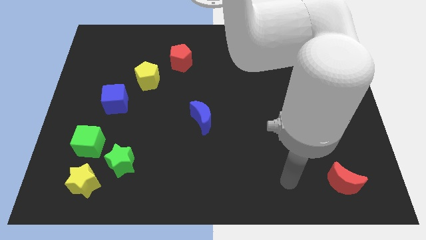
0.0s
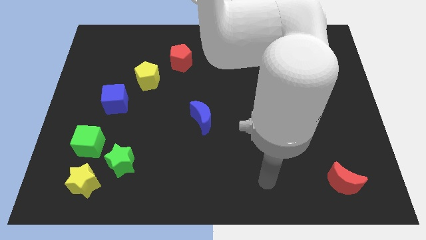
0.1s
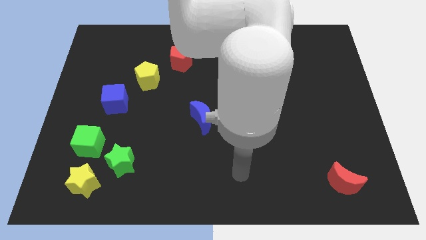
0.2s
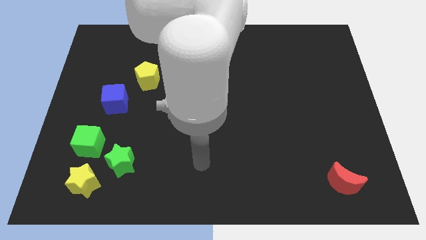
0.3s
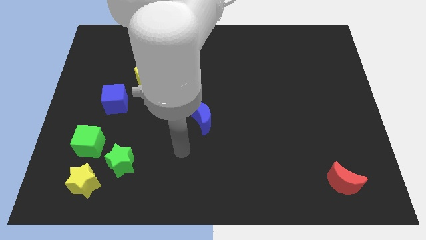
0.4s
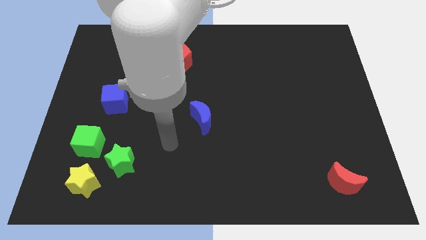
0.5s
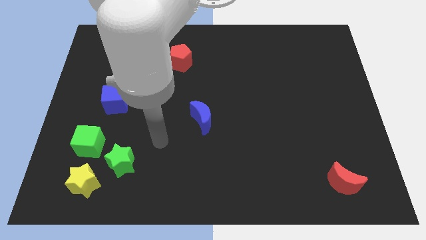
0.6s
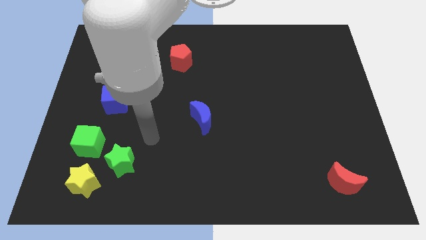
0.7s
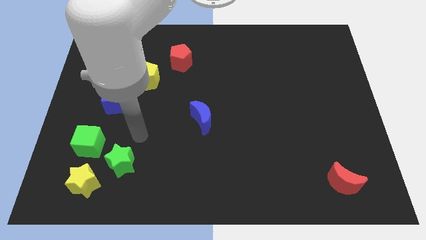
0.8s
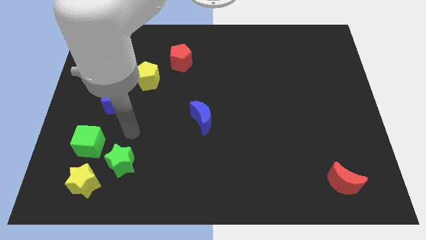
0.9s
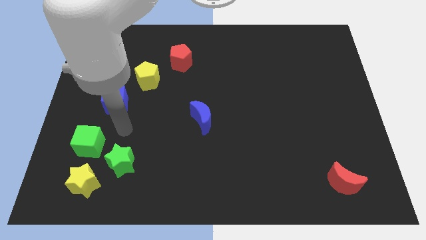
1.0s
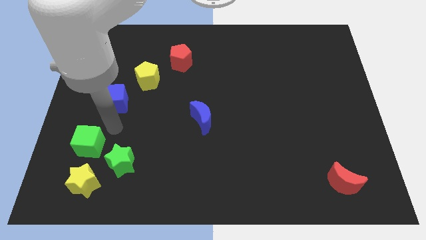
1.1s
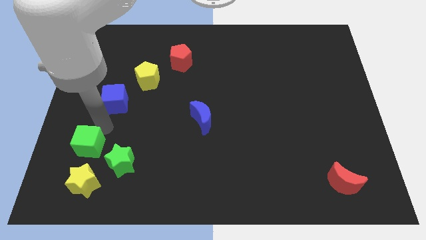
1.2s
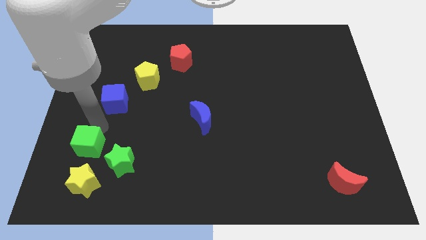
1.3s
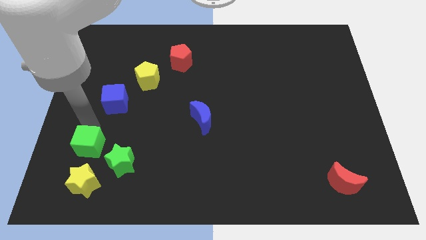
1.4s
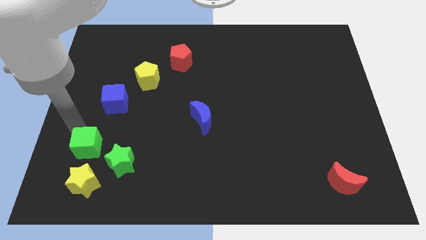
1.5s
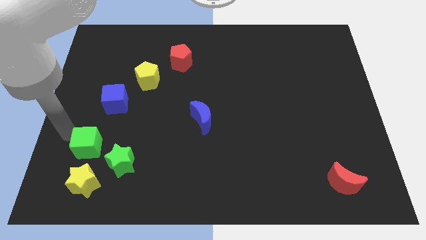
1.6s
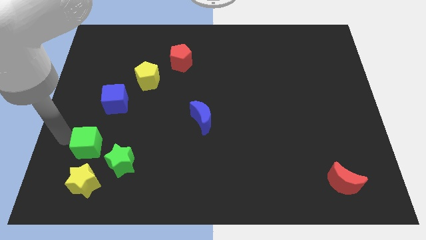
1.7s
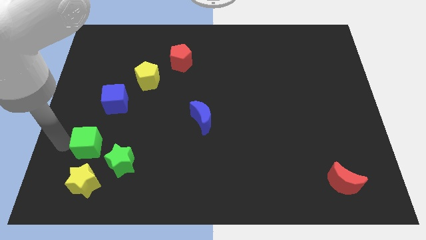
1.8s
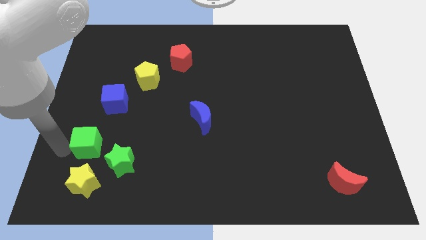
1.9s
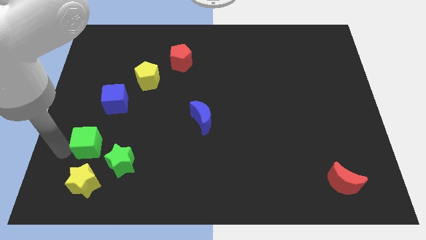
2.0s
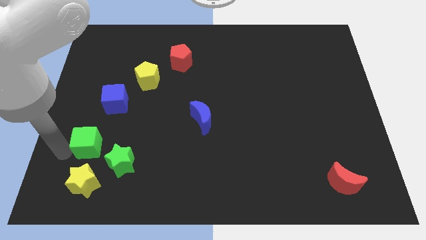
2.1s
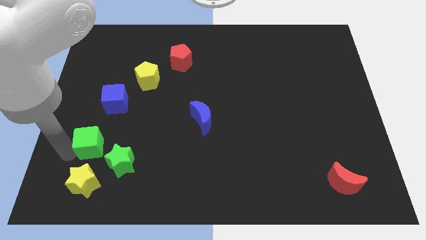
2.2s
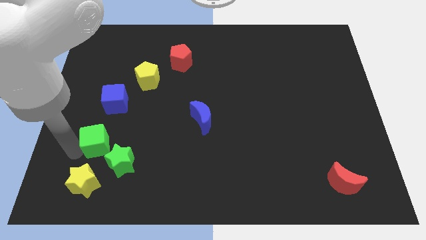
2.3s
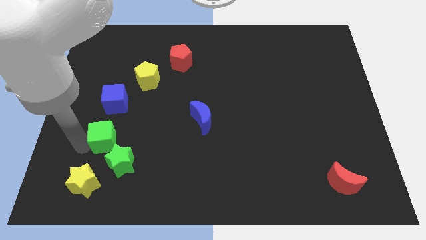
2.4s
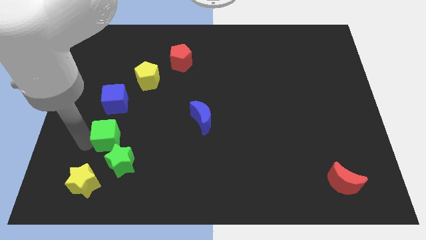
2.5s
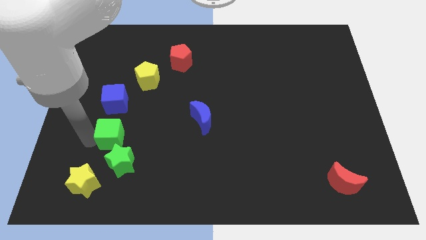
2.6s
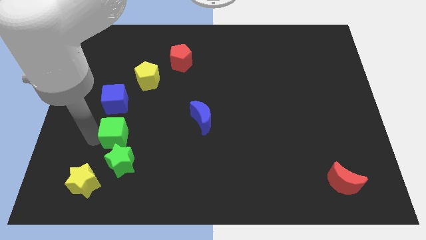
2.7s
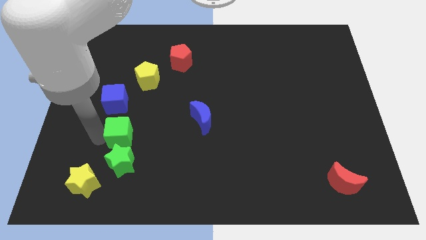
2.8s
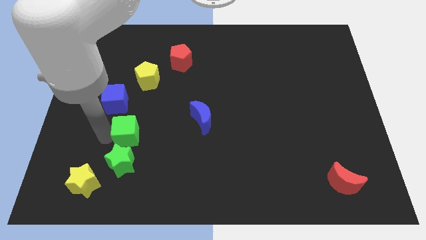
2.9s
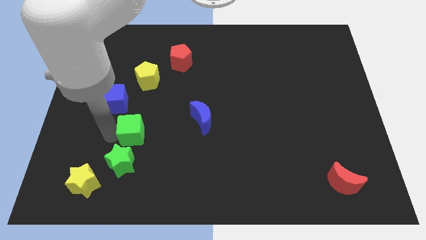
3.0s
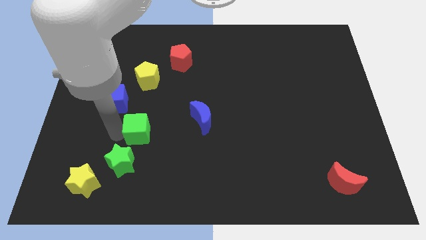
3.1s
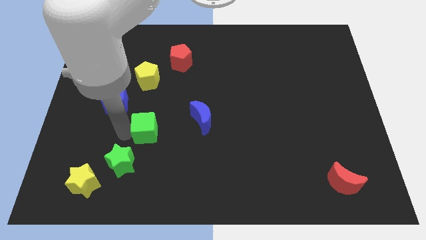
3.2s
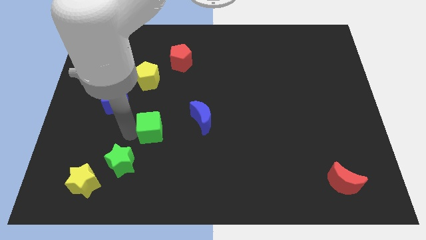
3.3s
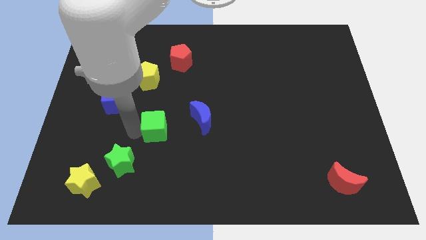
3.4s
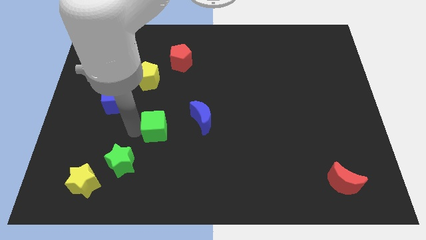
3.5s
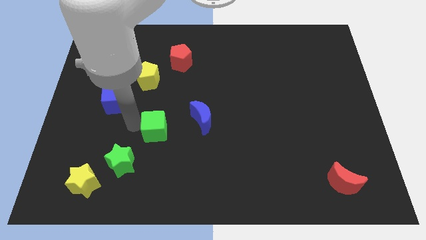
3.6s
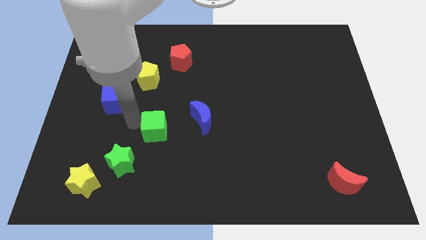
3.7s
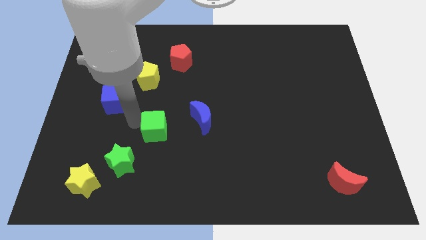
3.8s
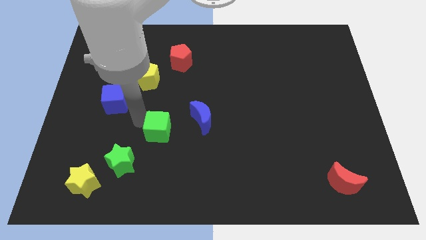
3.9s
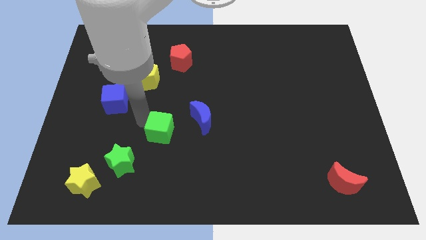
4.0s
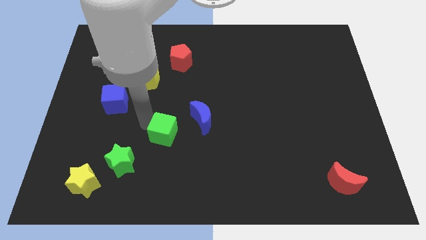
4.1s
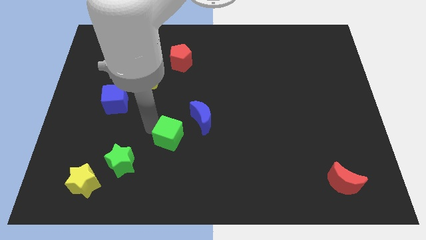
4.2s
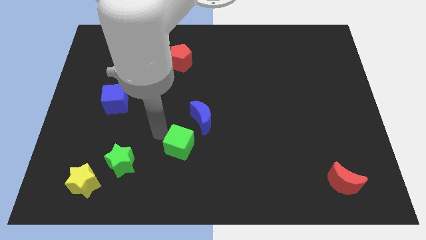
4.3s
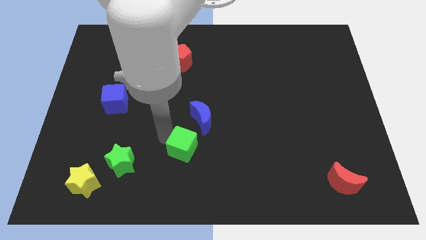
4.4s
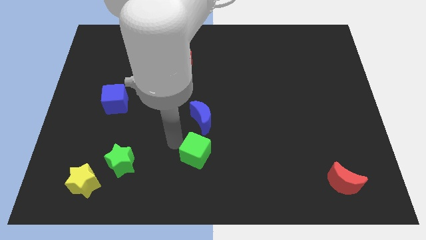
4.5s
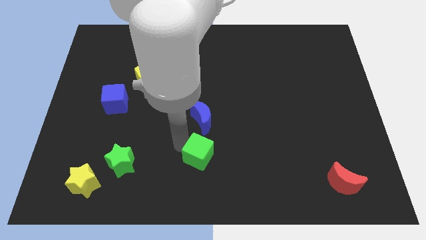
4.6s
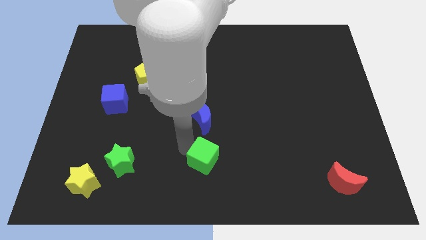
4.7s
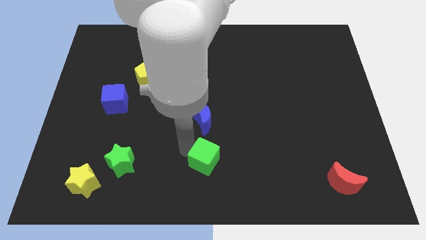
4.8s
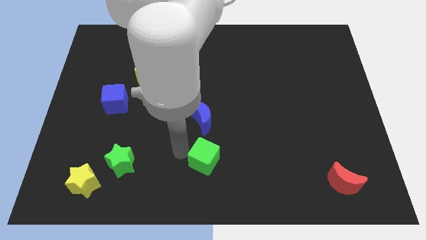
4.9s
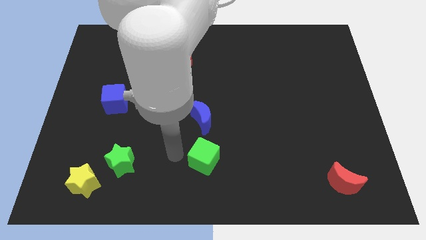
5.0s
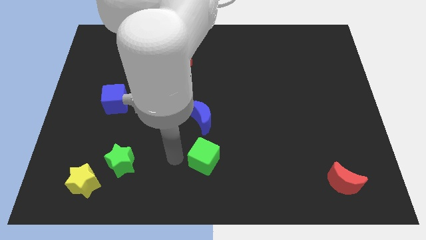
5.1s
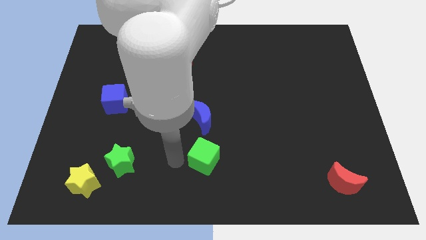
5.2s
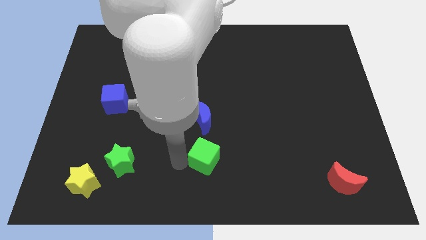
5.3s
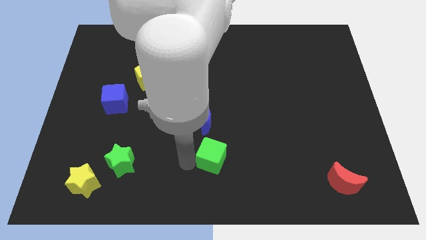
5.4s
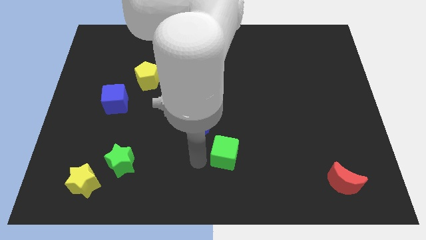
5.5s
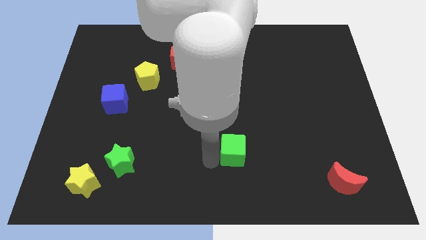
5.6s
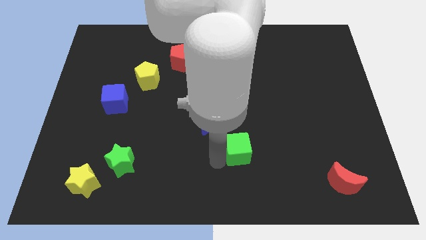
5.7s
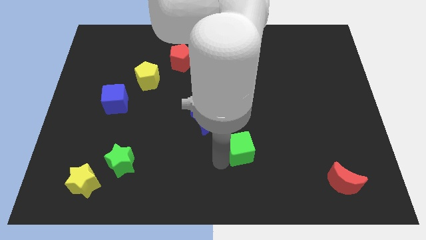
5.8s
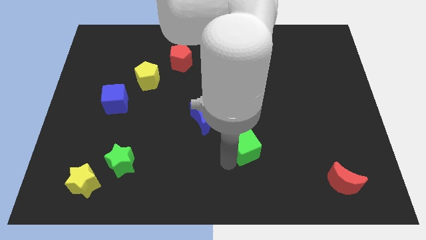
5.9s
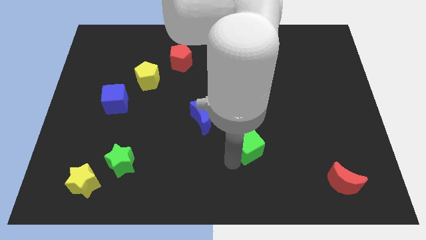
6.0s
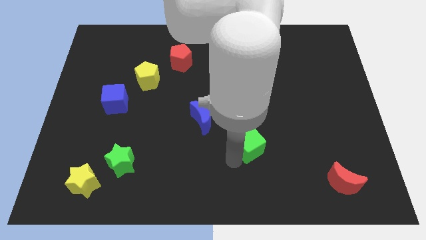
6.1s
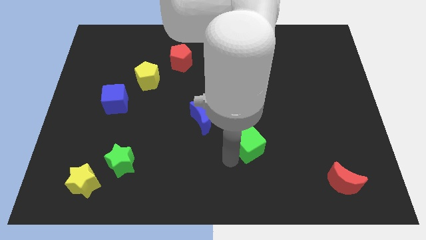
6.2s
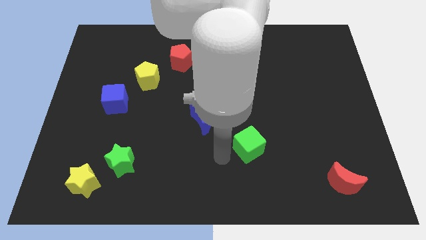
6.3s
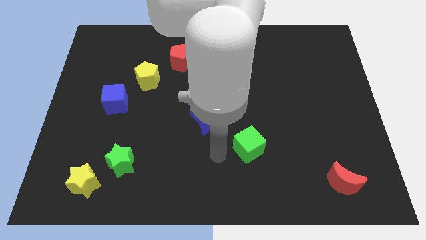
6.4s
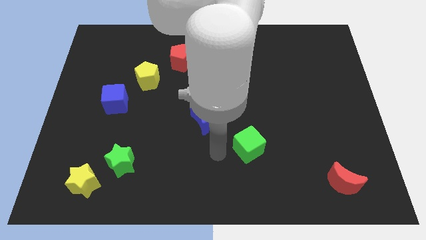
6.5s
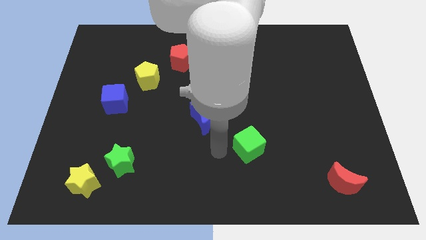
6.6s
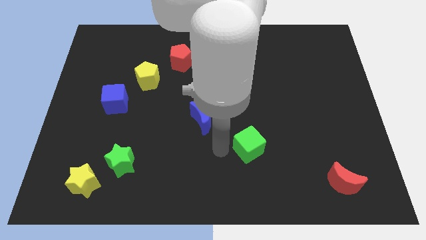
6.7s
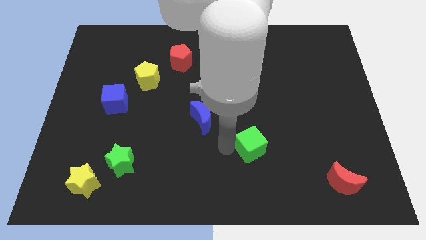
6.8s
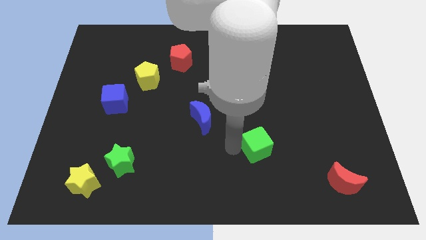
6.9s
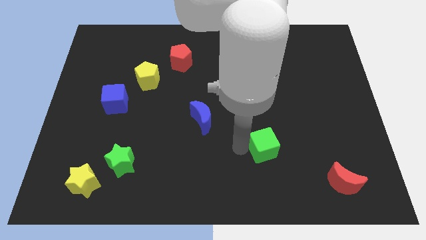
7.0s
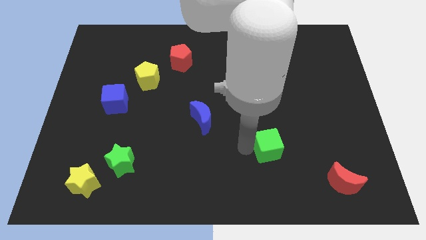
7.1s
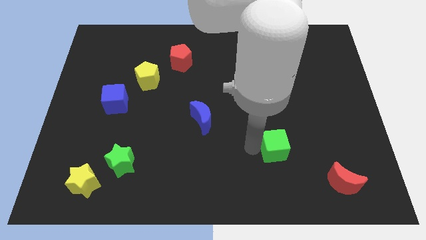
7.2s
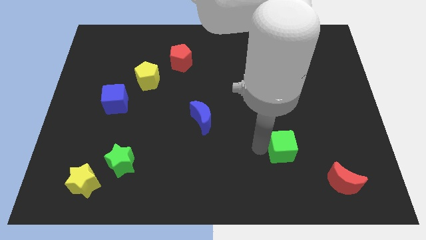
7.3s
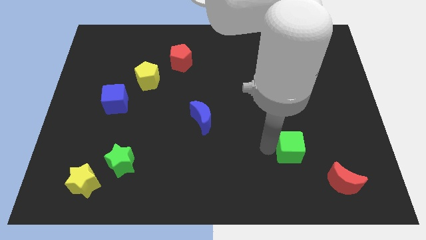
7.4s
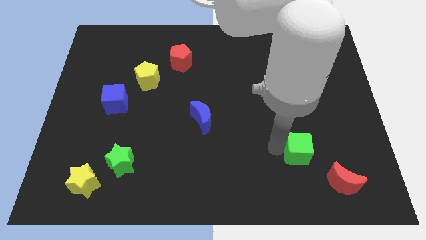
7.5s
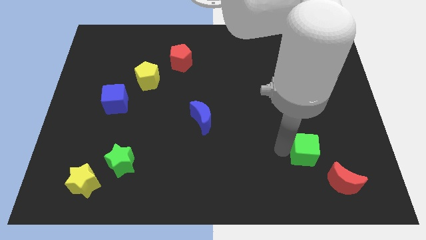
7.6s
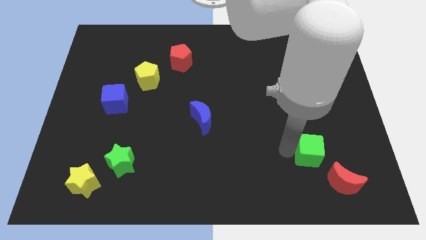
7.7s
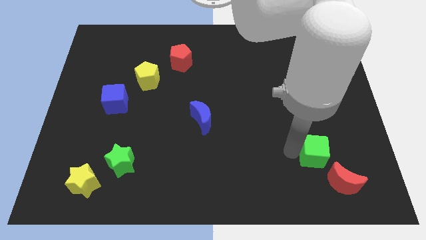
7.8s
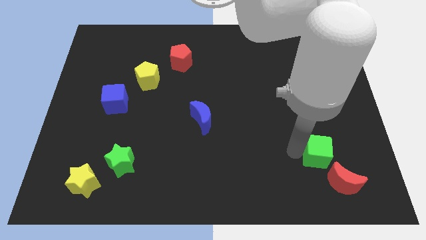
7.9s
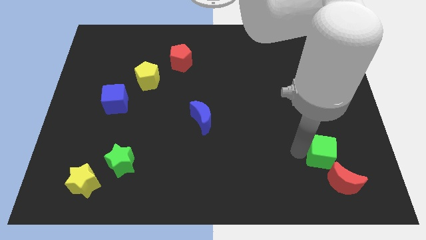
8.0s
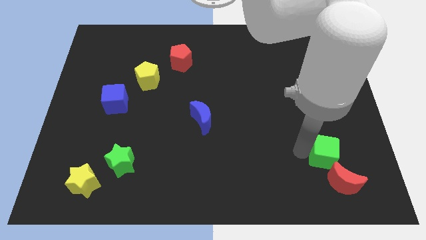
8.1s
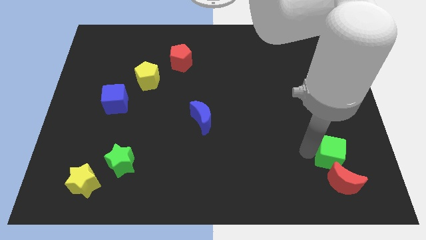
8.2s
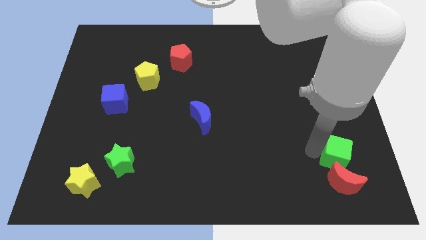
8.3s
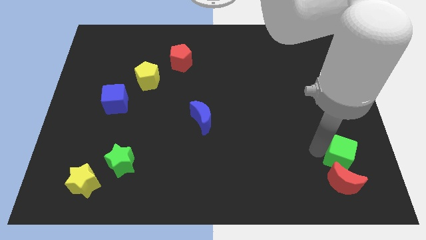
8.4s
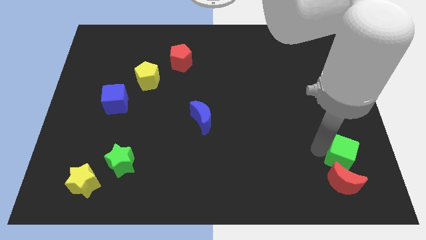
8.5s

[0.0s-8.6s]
push the green cube next to the red moon
